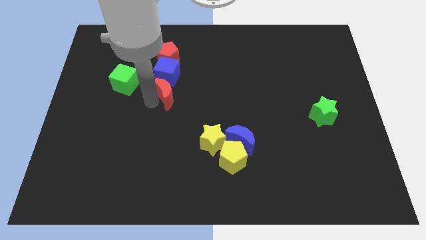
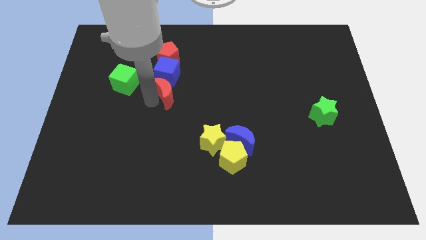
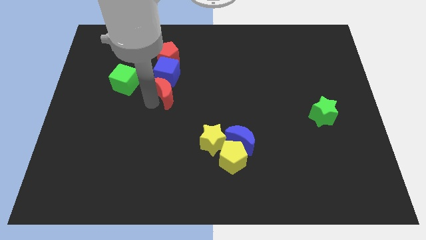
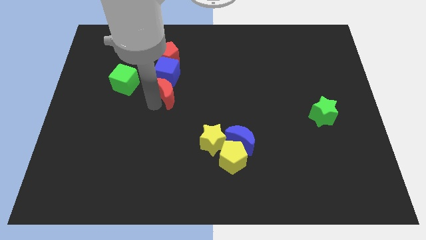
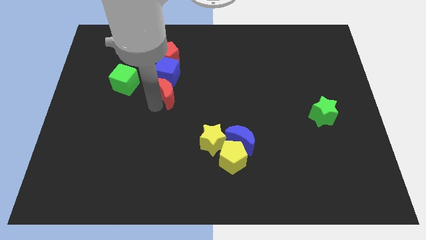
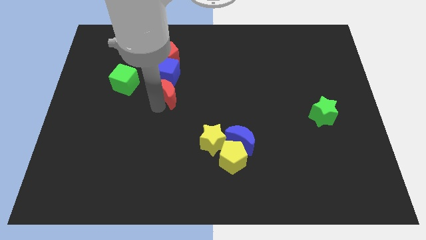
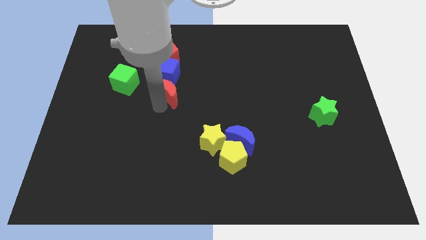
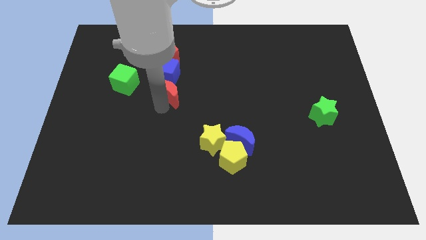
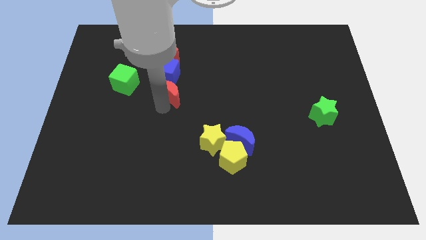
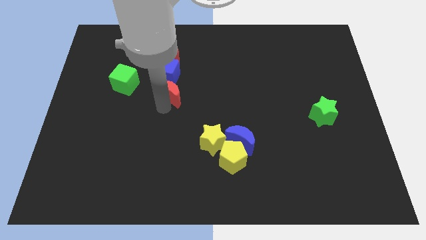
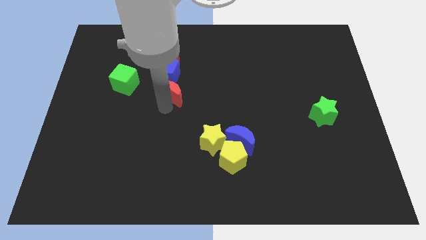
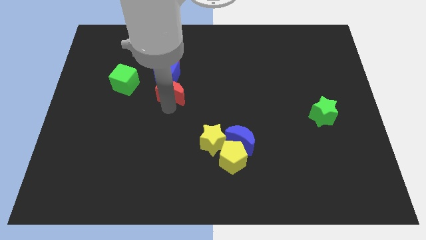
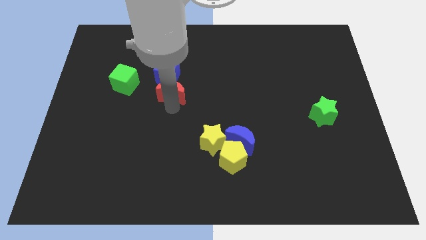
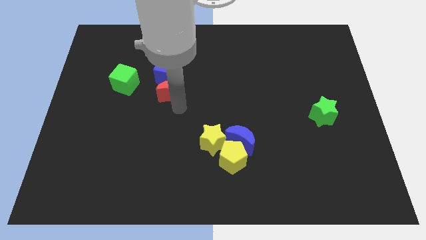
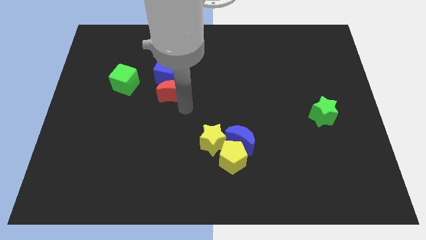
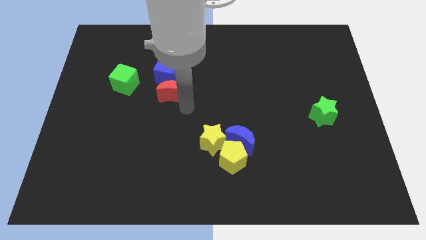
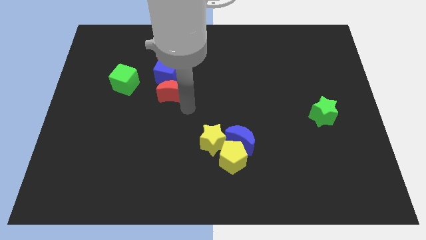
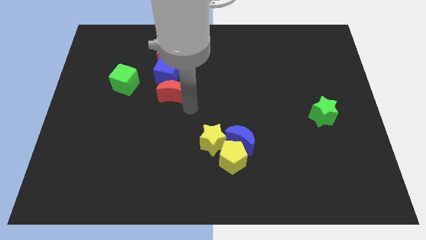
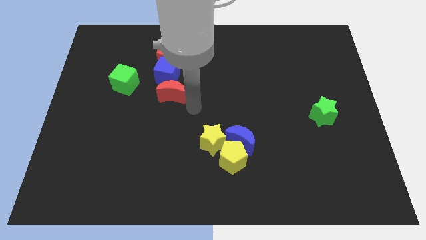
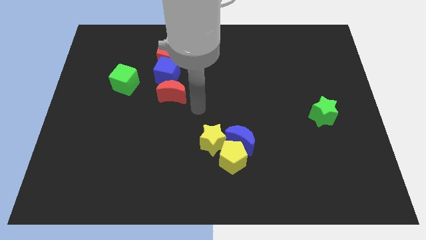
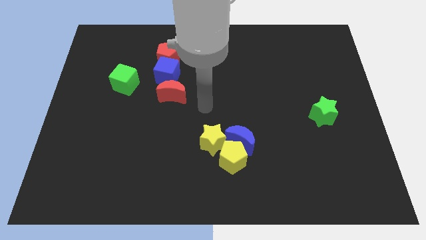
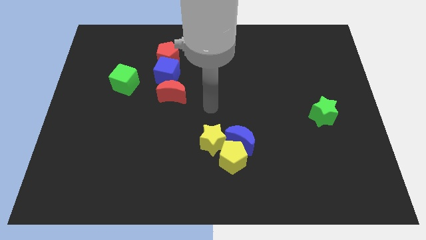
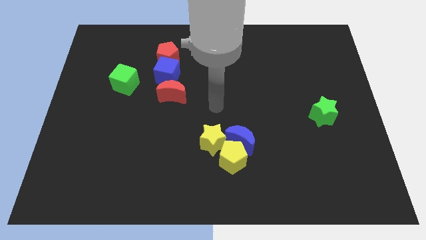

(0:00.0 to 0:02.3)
push the red crescent up slightly

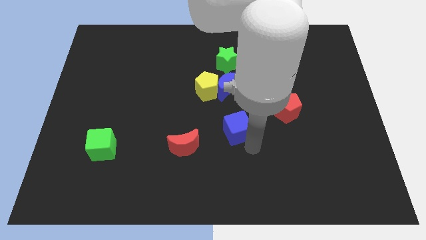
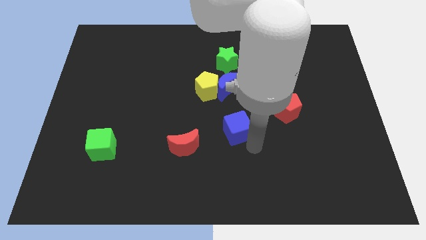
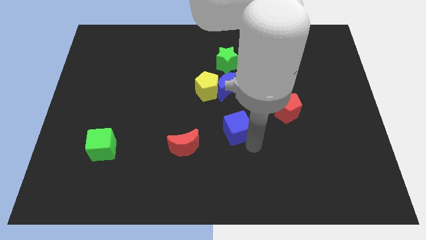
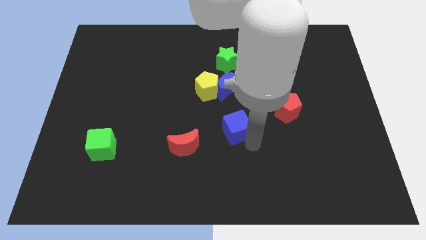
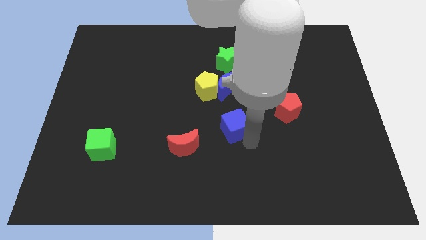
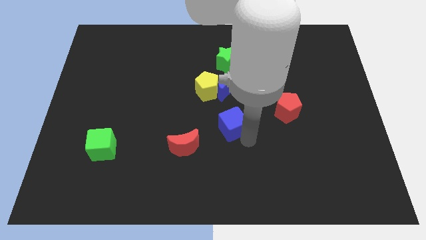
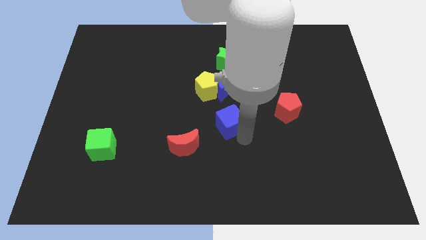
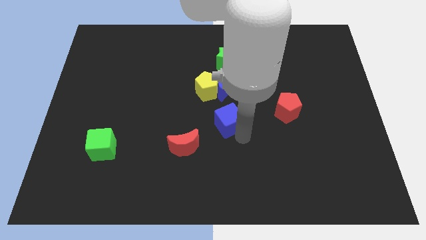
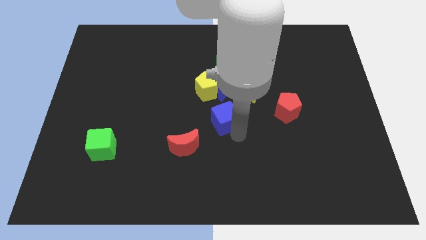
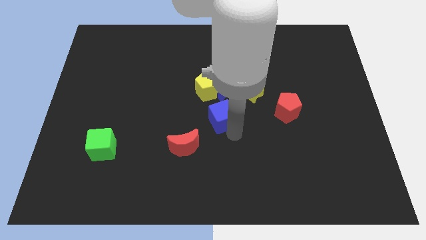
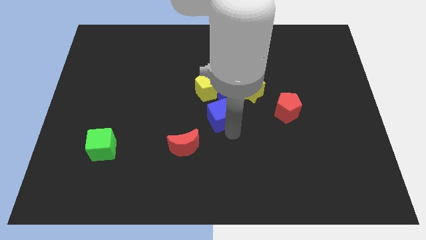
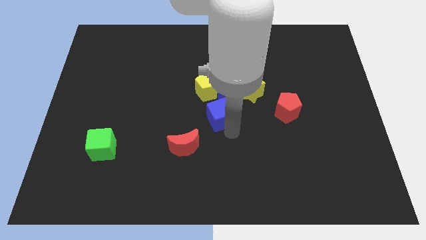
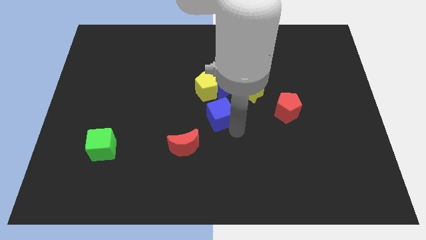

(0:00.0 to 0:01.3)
push the blue cube towards the center of the board

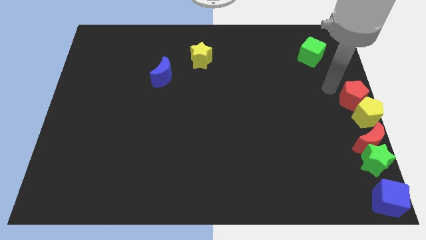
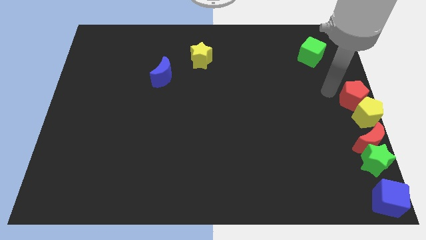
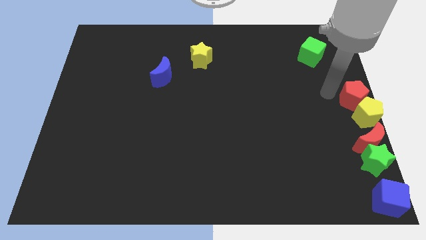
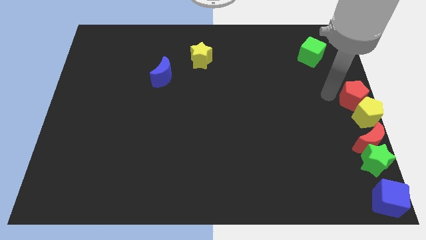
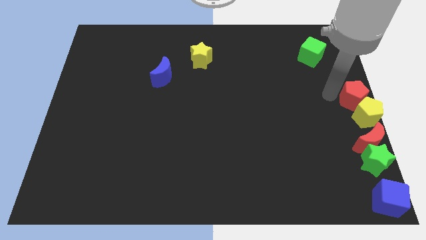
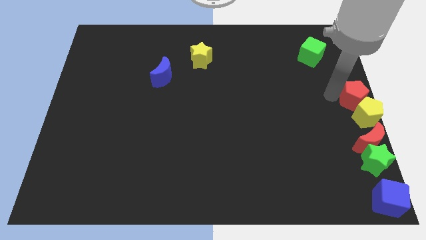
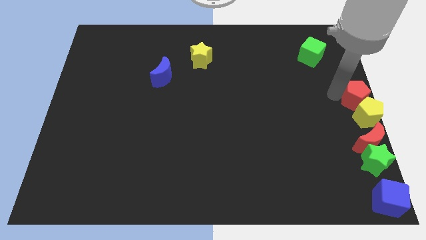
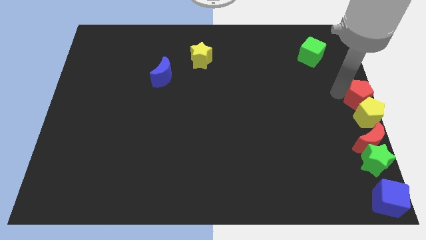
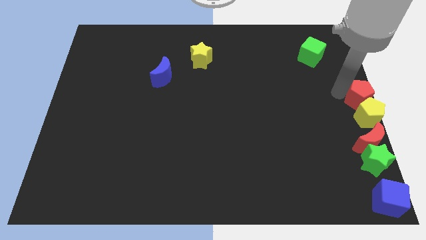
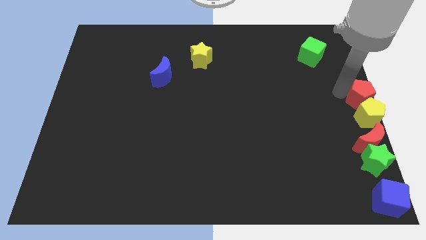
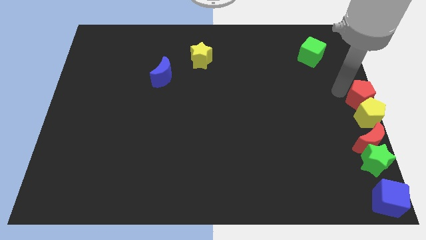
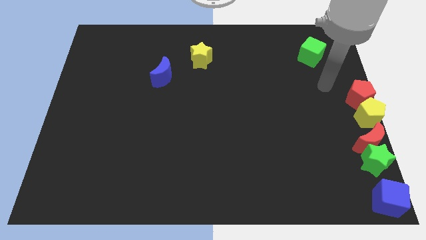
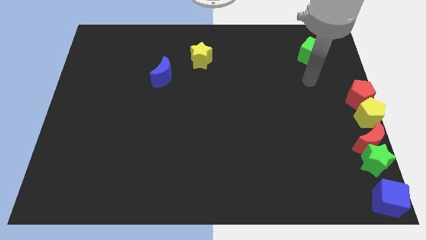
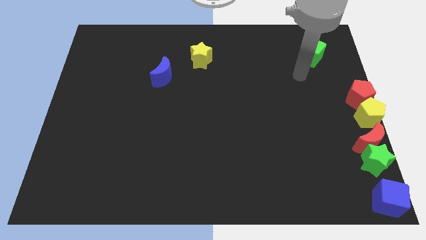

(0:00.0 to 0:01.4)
slightly push the red pentagon to the top of the yellow pentagon

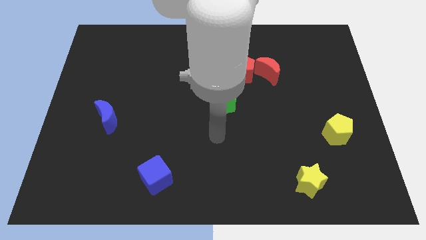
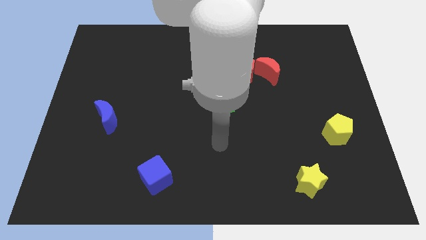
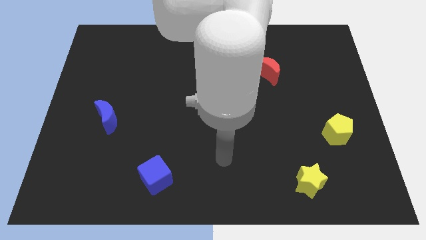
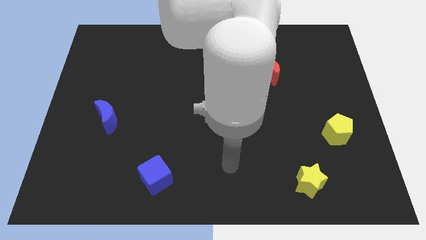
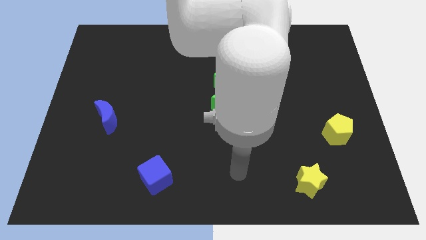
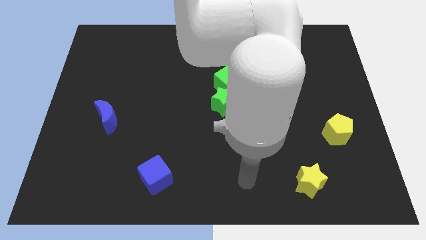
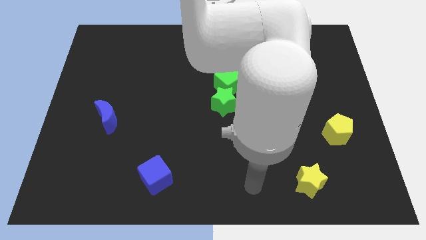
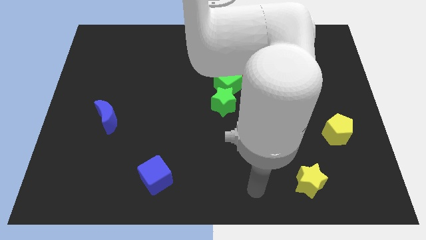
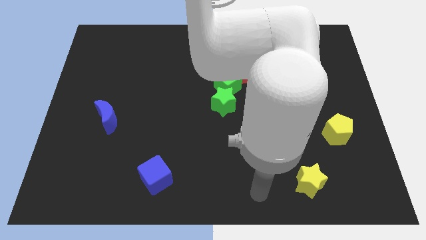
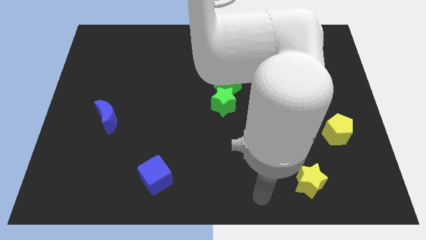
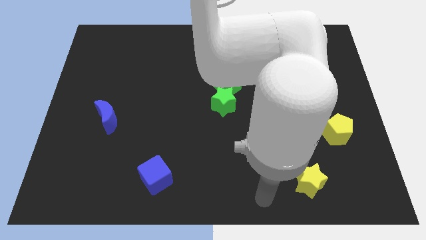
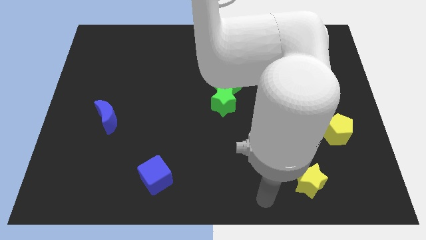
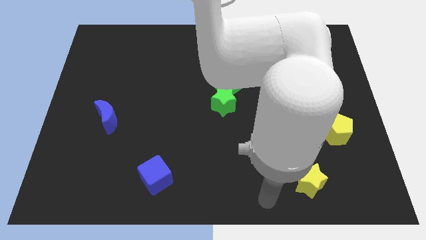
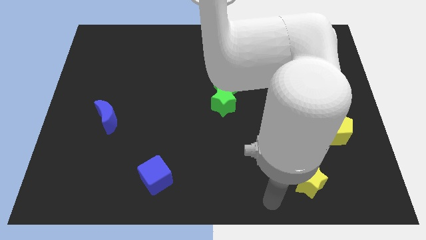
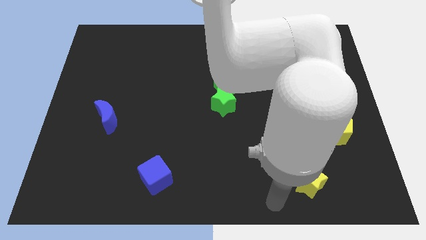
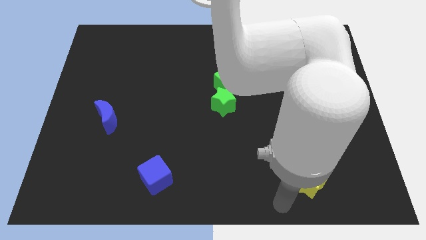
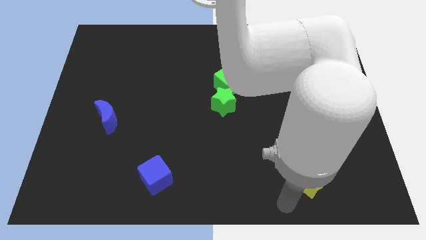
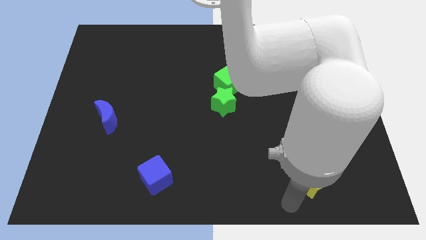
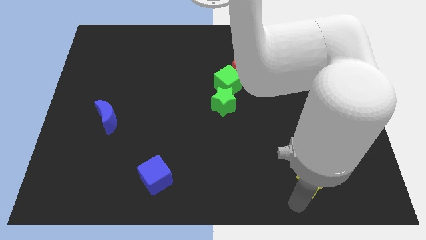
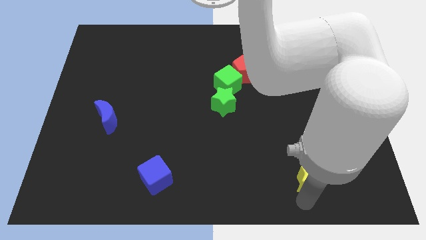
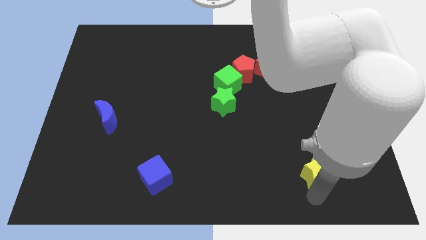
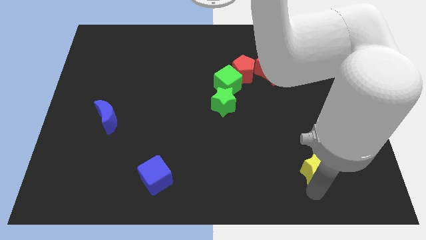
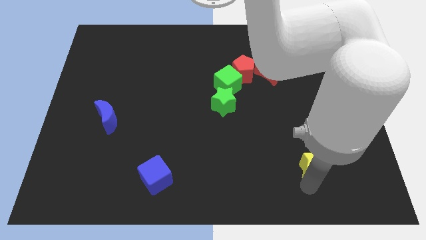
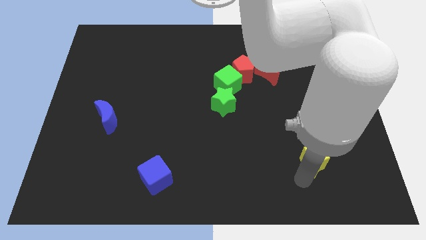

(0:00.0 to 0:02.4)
push the yellow star towards the yellow pentagon

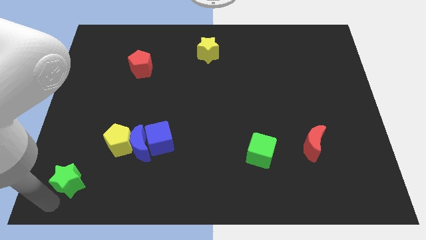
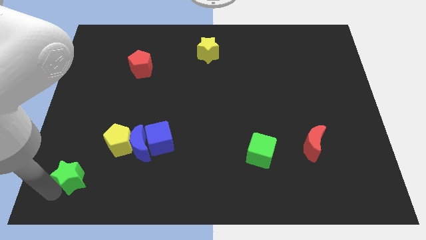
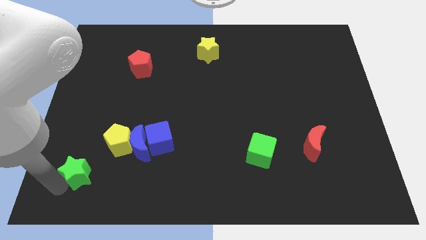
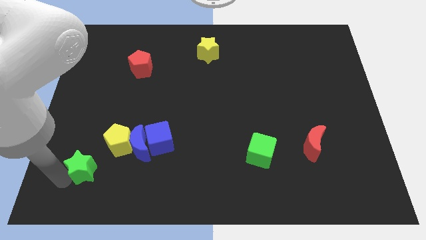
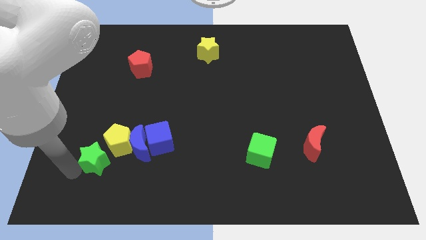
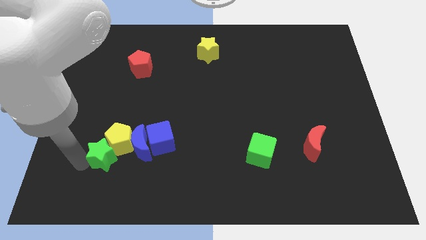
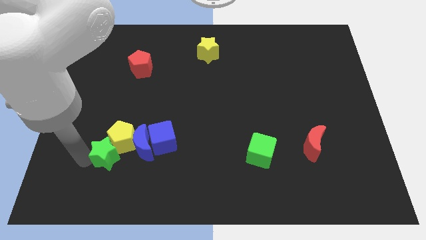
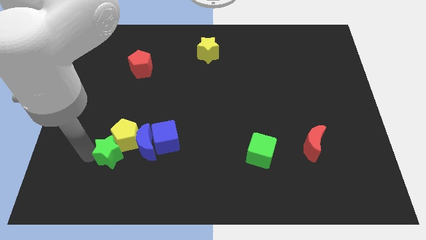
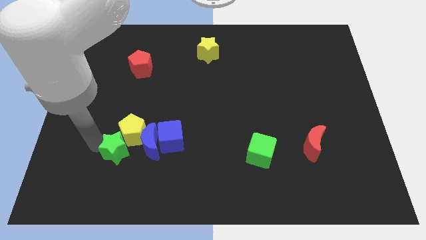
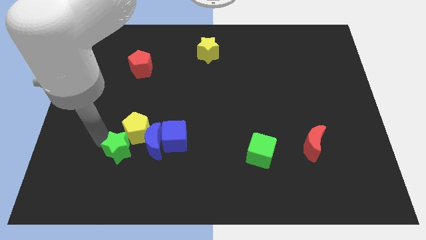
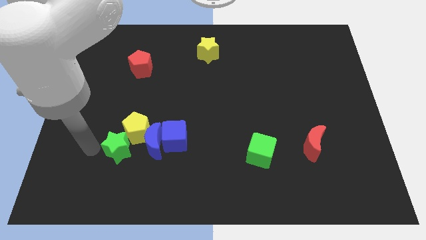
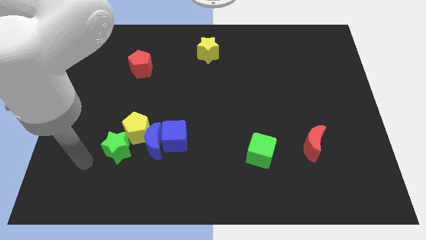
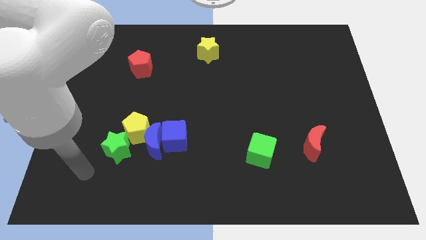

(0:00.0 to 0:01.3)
push the green star into the yellow pentagon

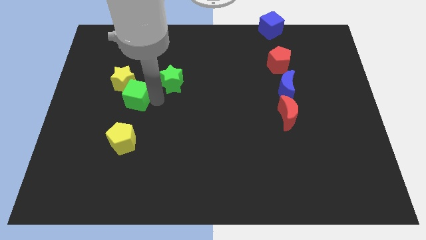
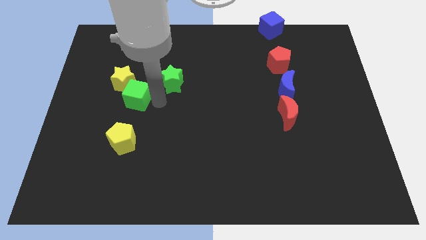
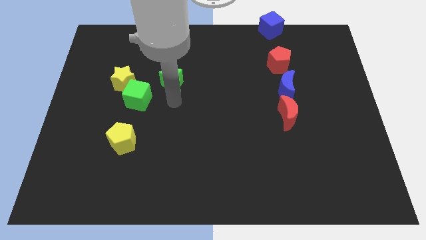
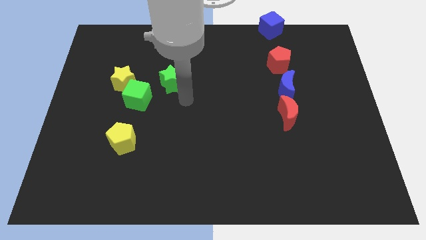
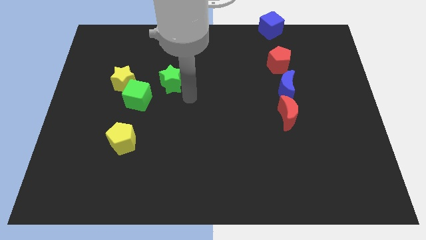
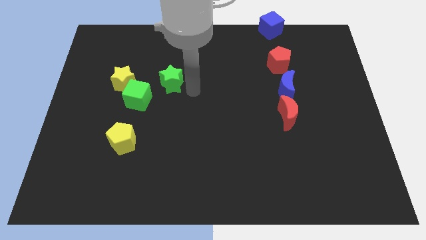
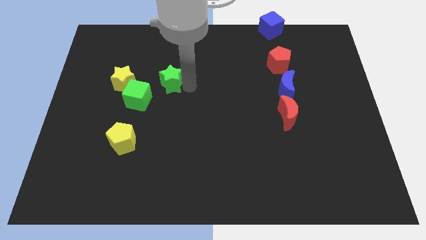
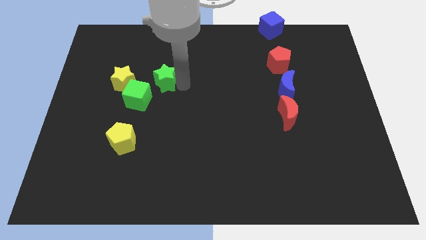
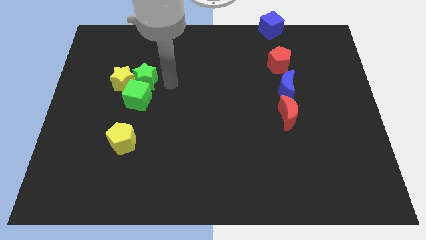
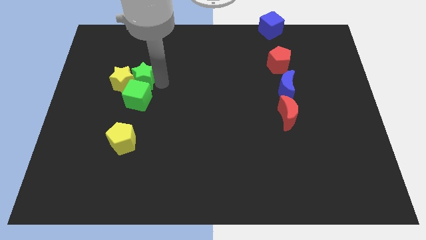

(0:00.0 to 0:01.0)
place the green star at the top of the green cube
